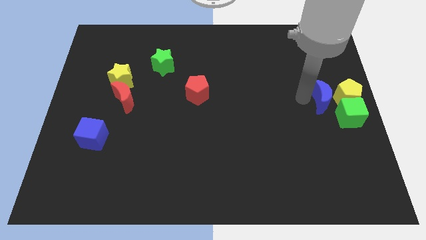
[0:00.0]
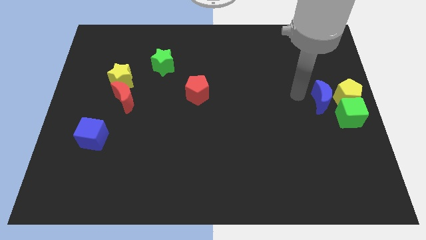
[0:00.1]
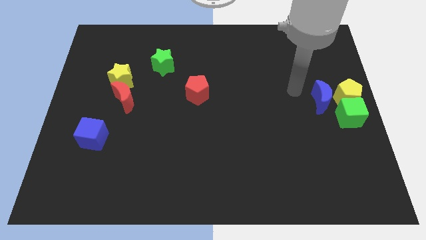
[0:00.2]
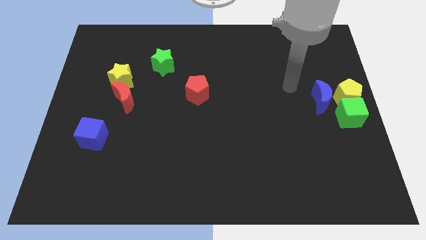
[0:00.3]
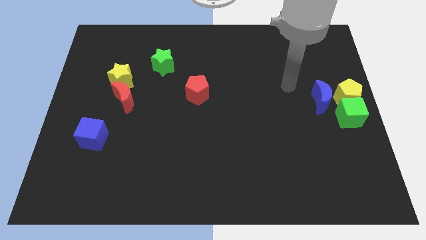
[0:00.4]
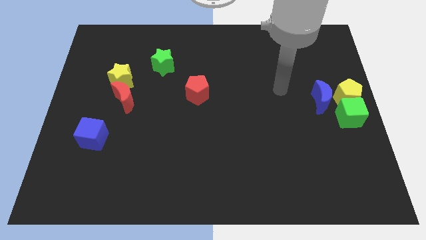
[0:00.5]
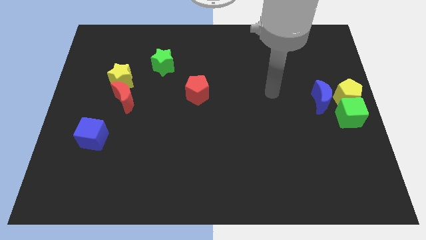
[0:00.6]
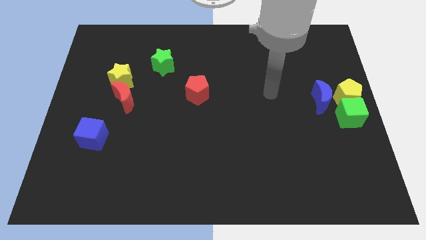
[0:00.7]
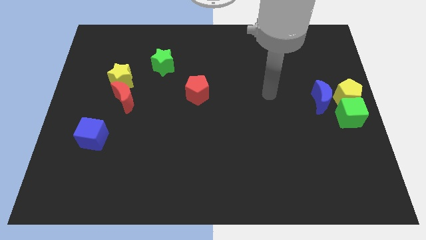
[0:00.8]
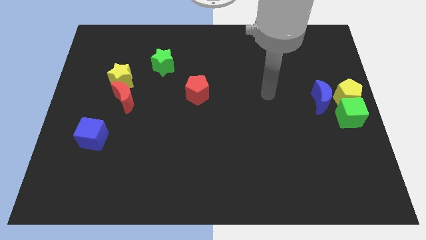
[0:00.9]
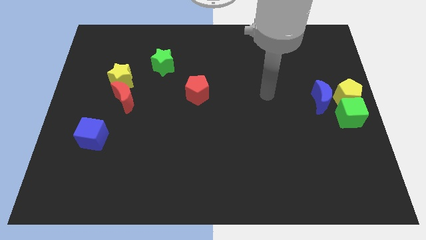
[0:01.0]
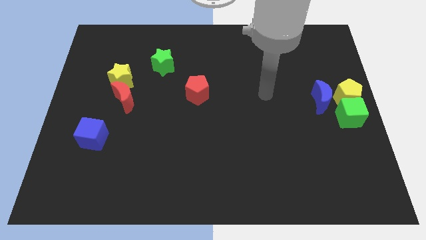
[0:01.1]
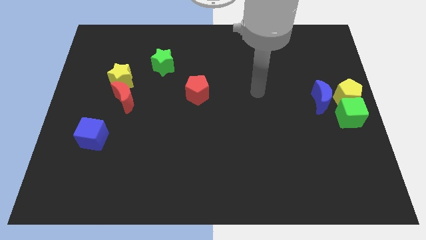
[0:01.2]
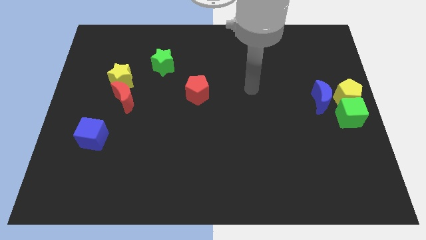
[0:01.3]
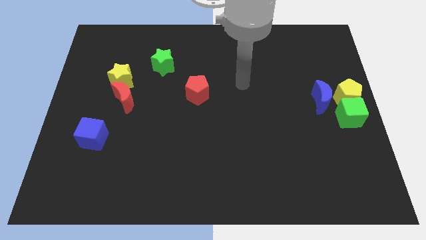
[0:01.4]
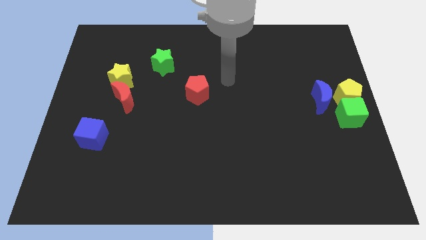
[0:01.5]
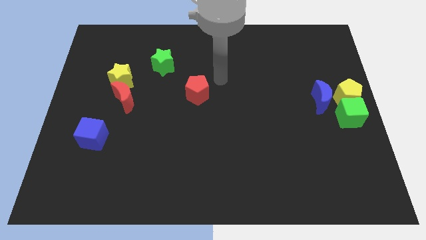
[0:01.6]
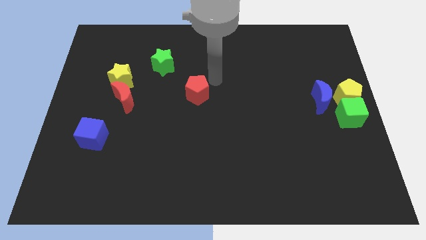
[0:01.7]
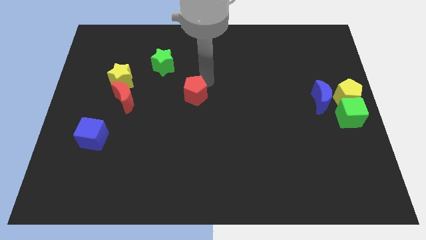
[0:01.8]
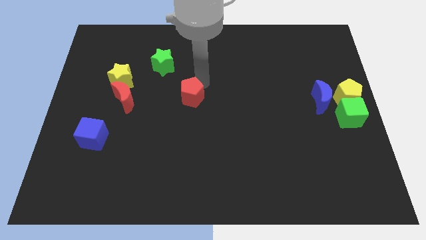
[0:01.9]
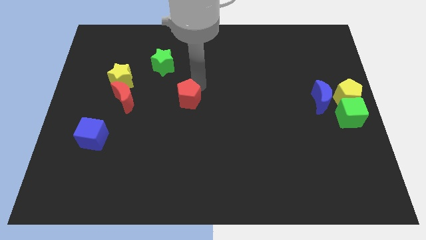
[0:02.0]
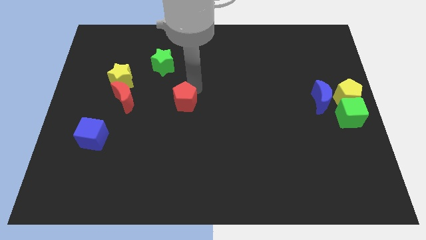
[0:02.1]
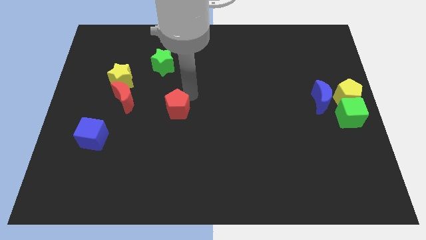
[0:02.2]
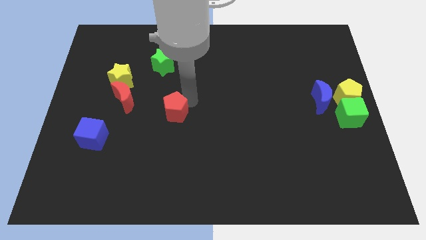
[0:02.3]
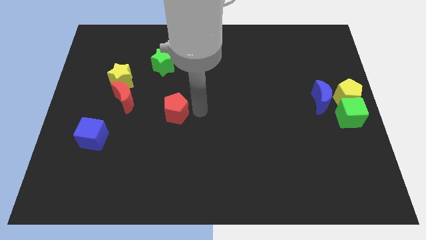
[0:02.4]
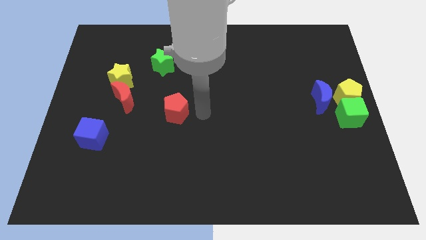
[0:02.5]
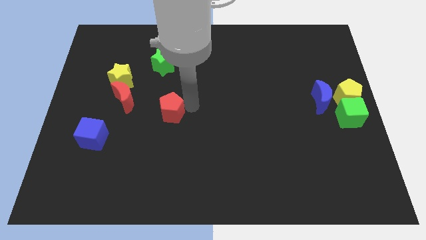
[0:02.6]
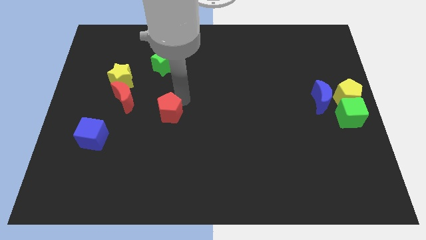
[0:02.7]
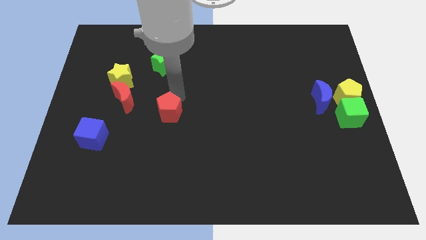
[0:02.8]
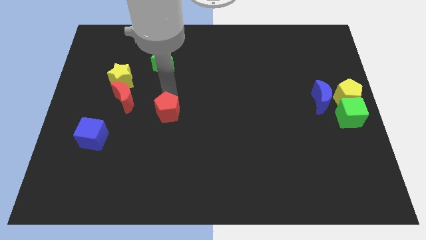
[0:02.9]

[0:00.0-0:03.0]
push the red pentagon to the right of red moon

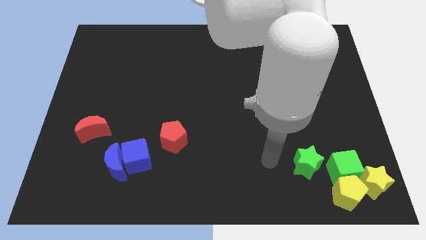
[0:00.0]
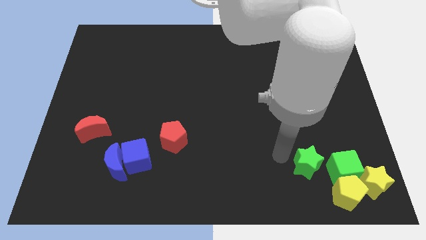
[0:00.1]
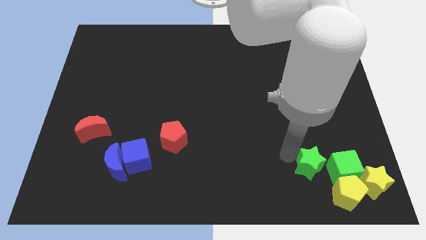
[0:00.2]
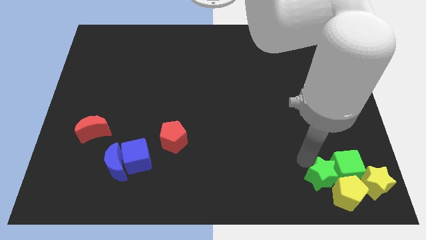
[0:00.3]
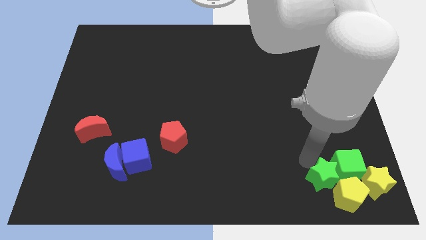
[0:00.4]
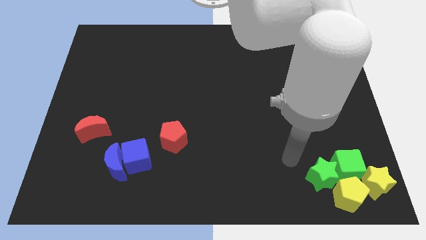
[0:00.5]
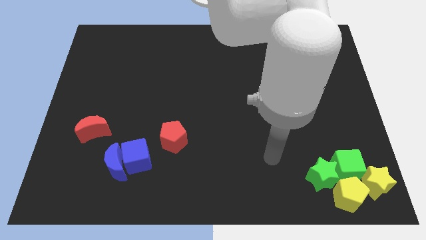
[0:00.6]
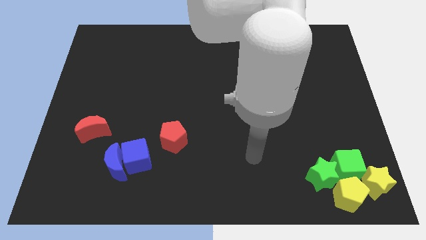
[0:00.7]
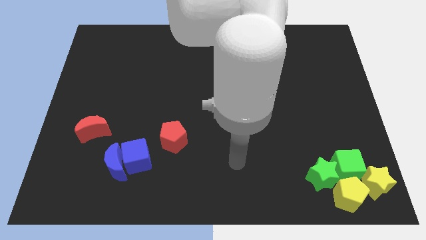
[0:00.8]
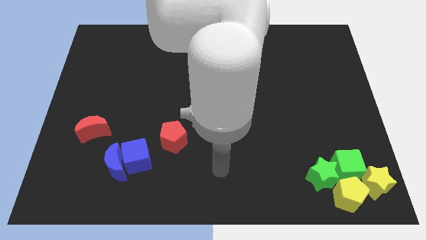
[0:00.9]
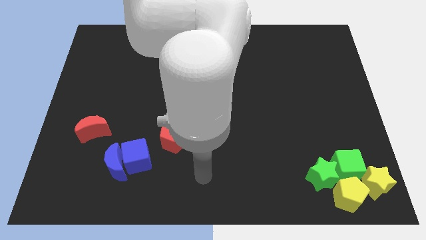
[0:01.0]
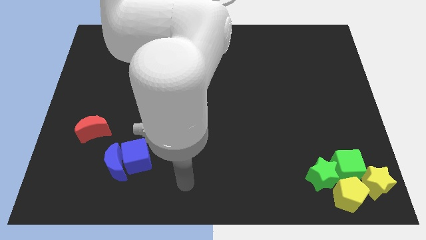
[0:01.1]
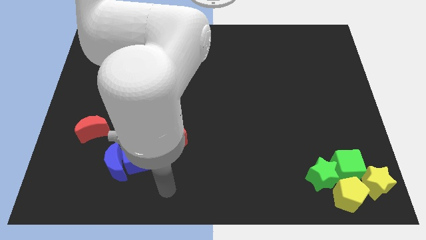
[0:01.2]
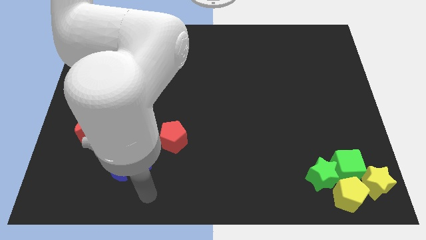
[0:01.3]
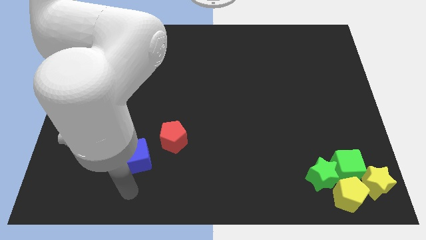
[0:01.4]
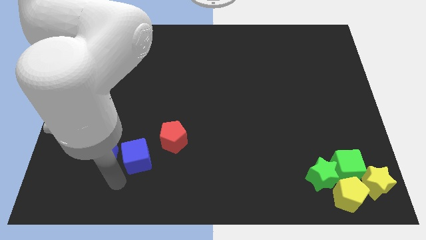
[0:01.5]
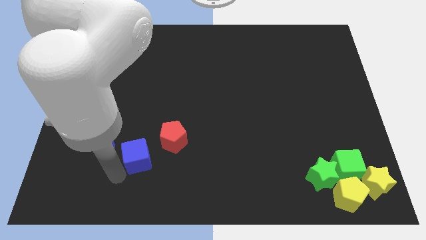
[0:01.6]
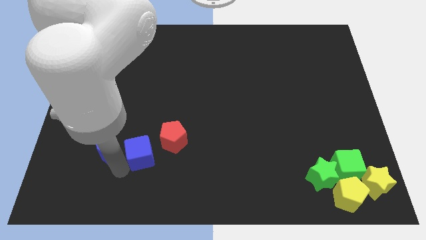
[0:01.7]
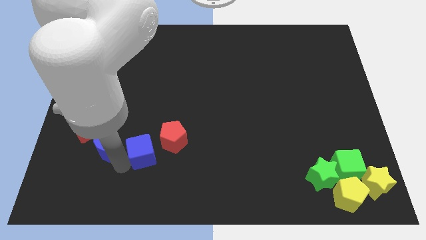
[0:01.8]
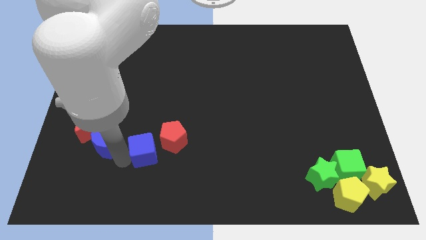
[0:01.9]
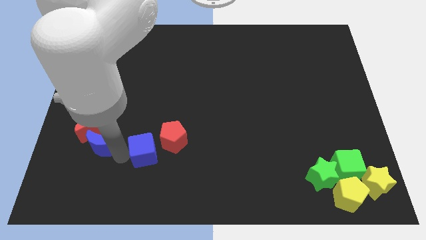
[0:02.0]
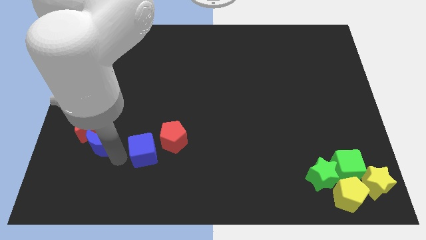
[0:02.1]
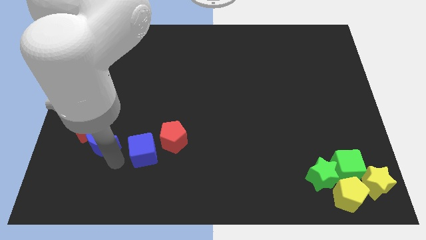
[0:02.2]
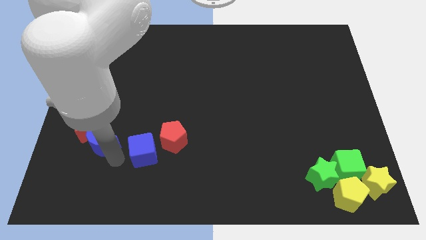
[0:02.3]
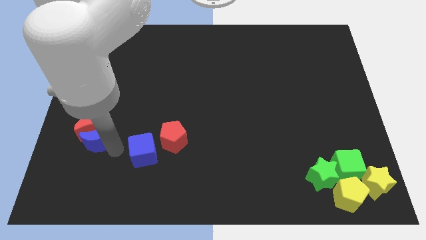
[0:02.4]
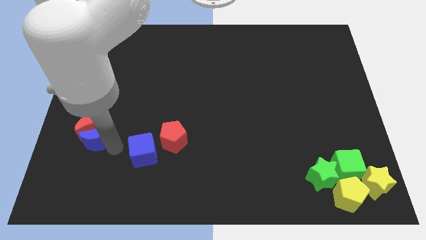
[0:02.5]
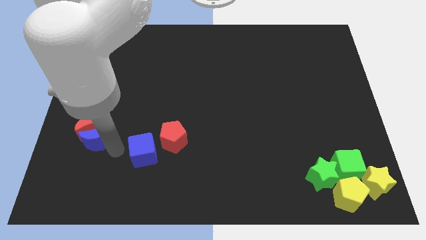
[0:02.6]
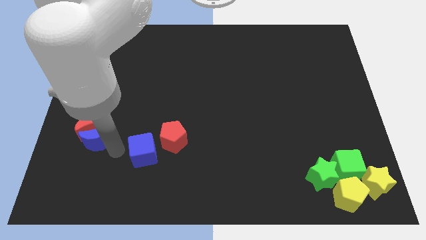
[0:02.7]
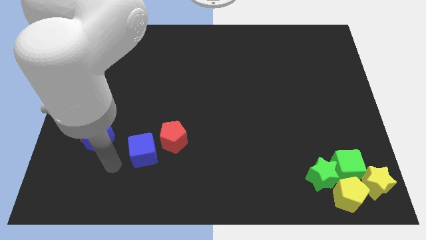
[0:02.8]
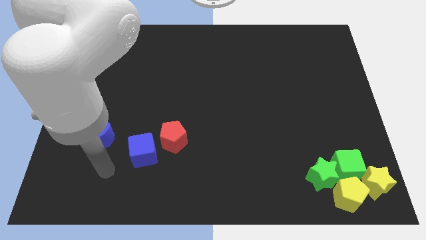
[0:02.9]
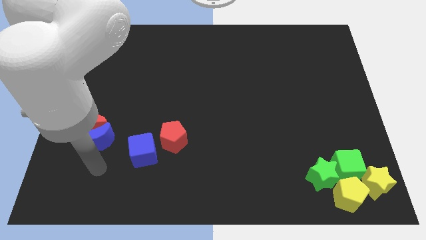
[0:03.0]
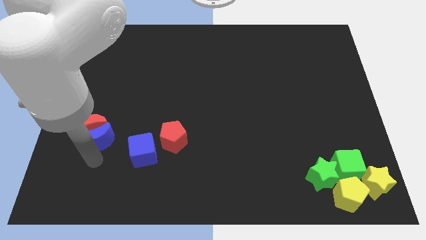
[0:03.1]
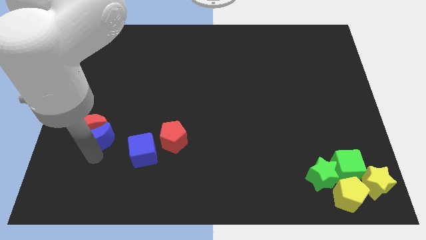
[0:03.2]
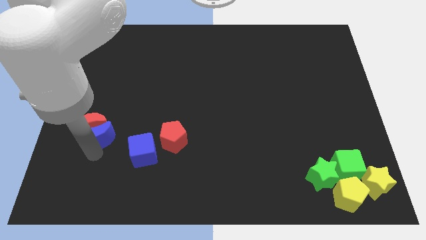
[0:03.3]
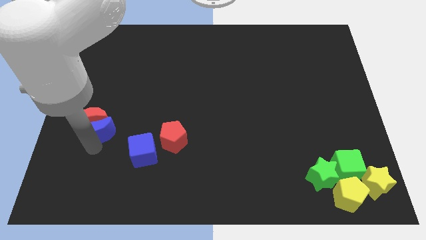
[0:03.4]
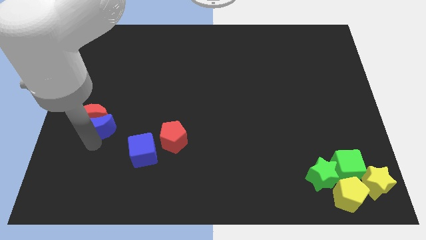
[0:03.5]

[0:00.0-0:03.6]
push blue crescent below red crescent

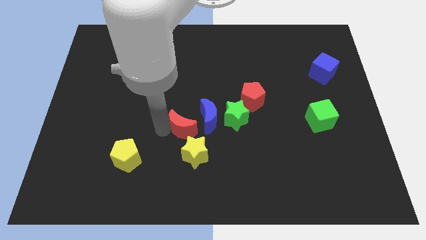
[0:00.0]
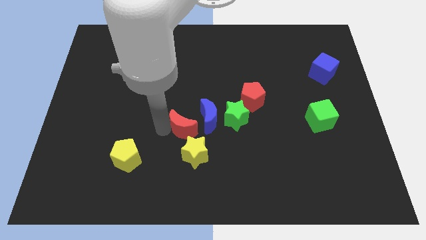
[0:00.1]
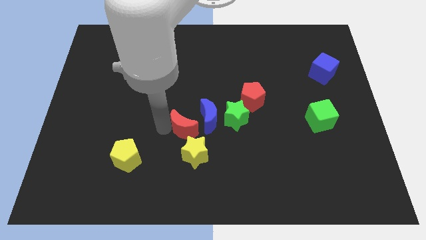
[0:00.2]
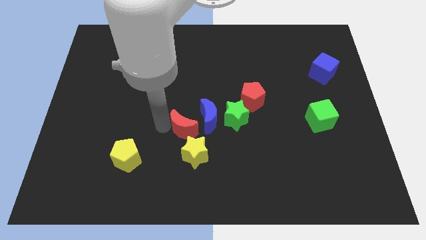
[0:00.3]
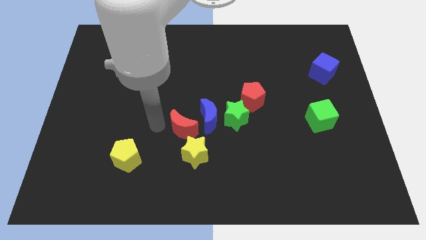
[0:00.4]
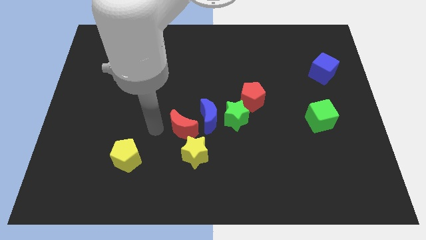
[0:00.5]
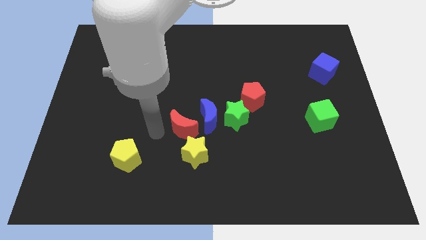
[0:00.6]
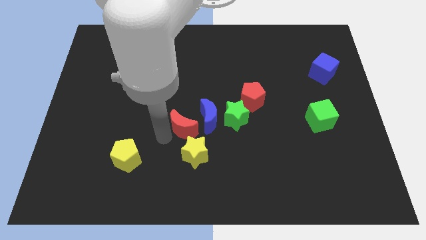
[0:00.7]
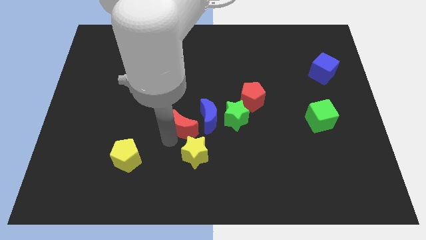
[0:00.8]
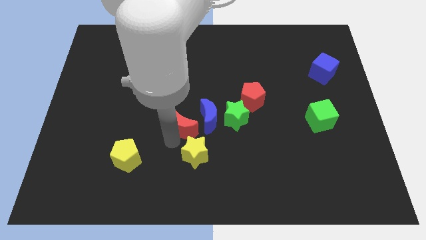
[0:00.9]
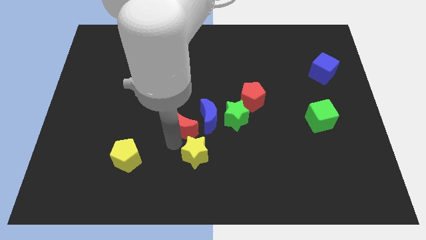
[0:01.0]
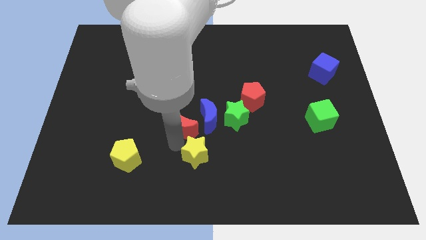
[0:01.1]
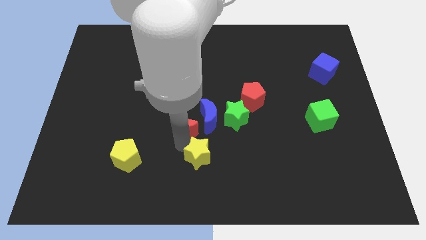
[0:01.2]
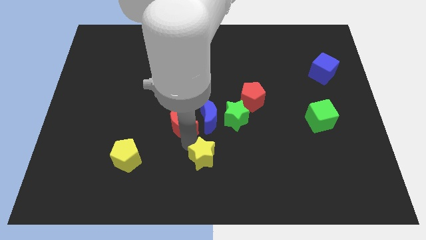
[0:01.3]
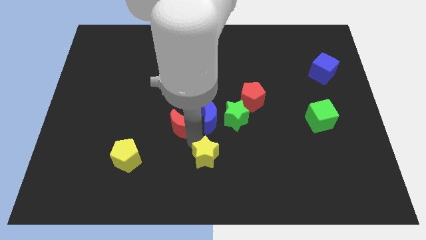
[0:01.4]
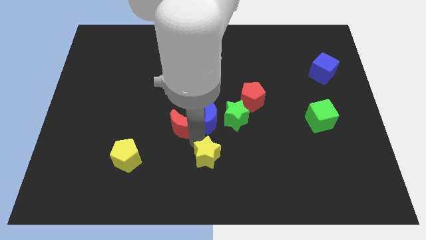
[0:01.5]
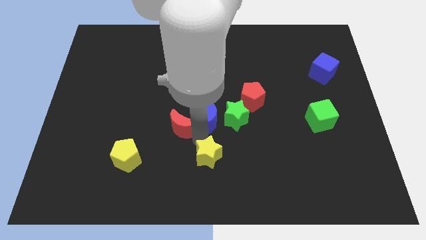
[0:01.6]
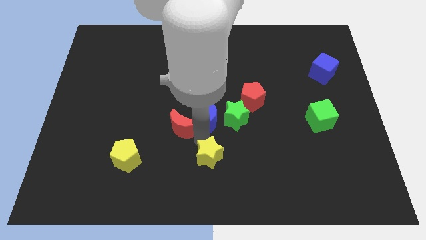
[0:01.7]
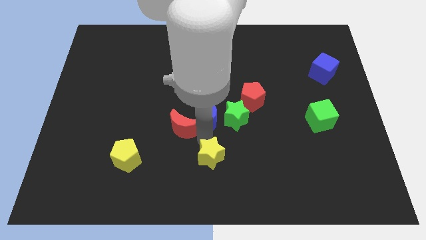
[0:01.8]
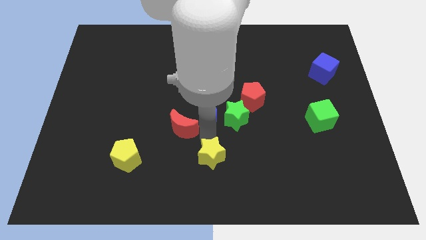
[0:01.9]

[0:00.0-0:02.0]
place the yellow star below the blue crescent

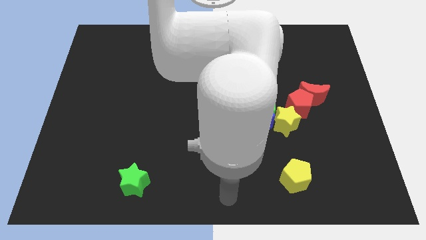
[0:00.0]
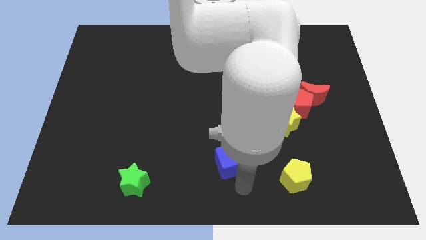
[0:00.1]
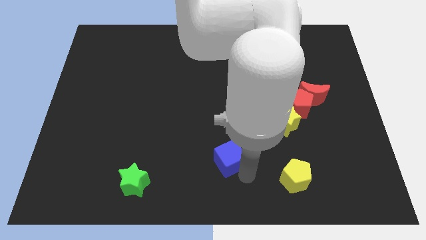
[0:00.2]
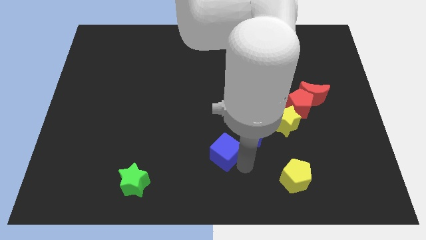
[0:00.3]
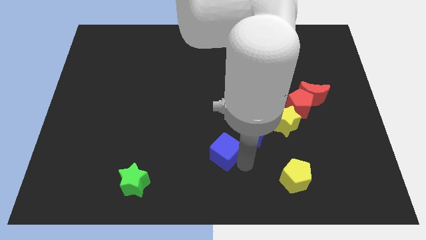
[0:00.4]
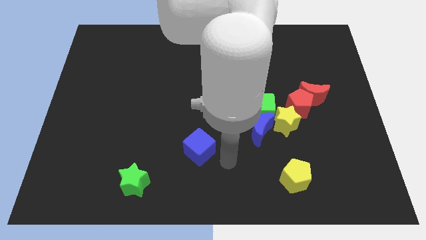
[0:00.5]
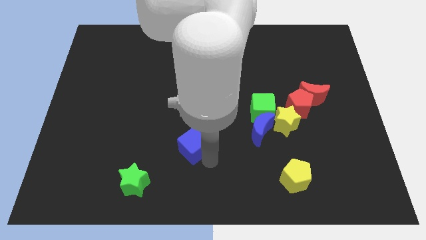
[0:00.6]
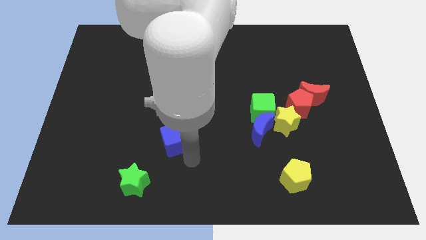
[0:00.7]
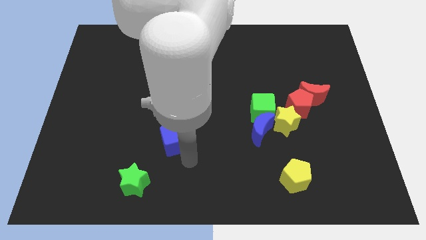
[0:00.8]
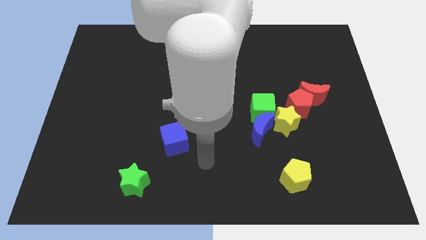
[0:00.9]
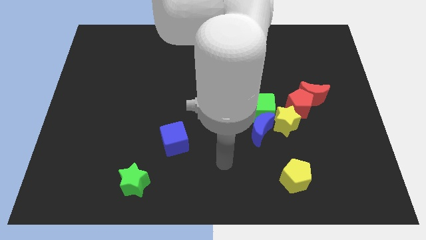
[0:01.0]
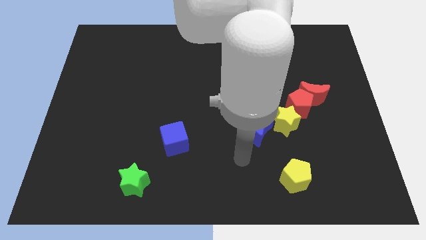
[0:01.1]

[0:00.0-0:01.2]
place the blue block diagonally top right to the green star
